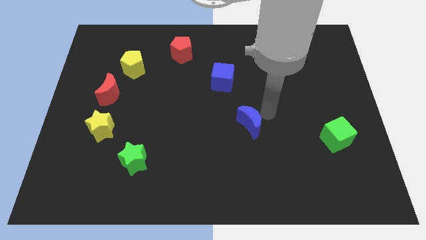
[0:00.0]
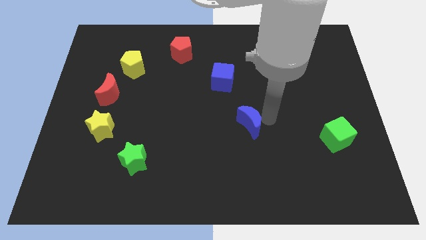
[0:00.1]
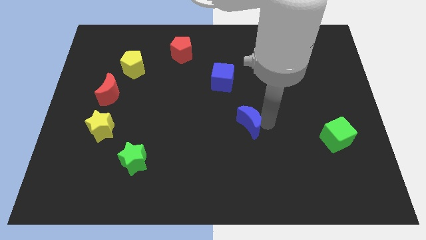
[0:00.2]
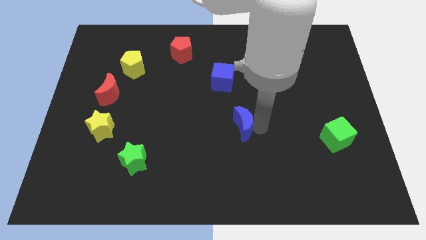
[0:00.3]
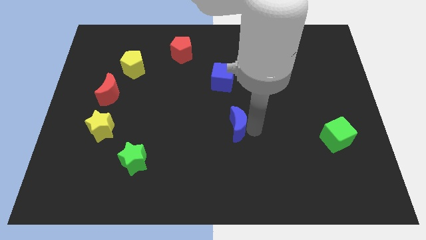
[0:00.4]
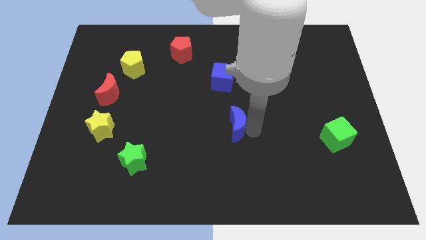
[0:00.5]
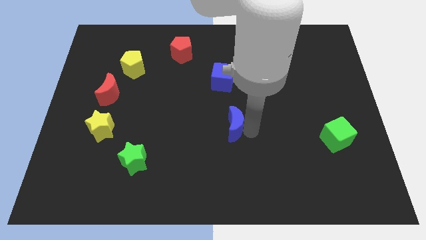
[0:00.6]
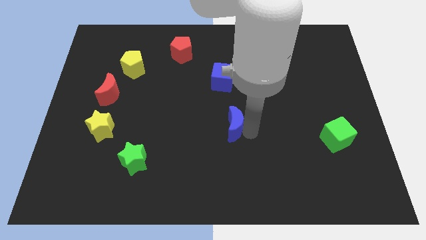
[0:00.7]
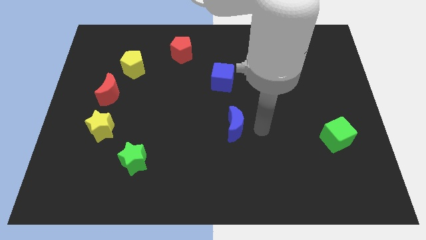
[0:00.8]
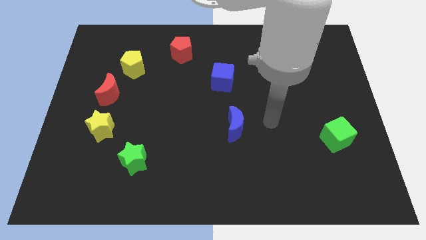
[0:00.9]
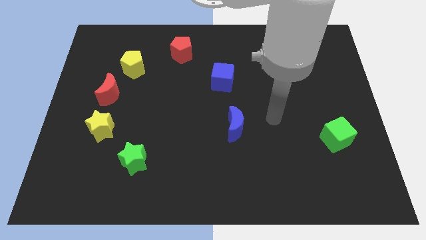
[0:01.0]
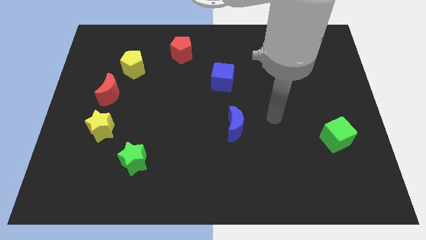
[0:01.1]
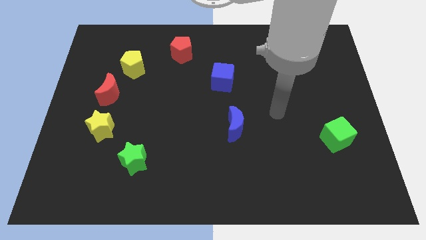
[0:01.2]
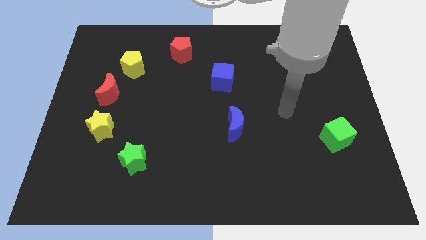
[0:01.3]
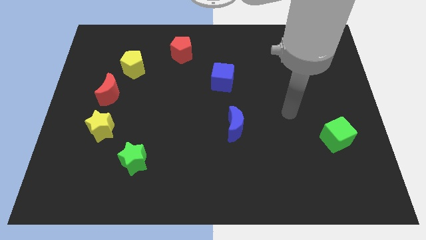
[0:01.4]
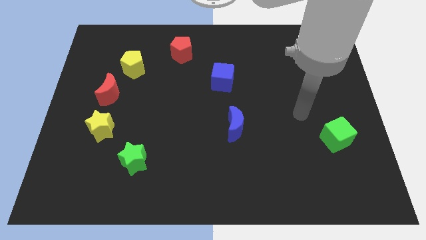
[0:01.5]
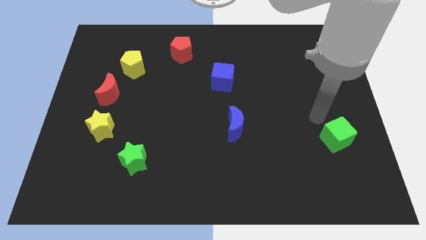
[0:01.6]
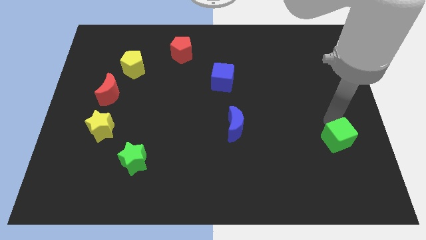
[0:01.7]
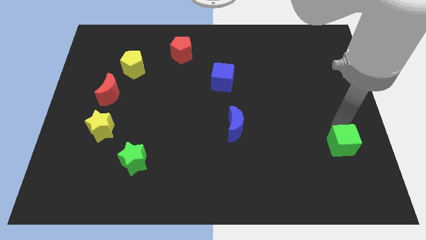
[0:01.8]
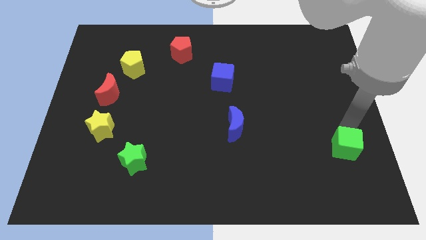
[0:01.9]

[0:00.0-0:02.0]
move your arm above green cube

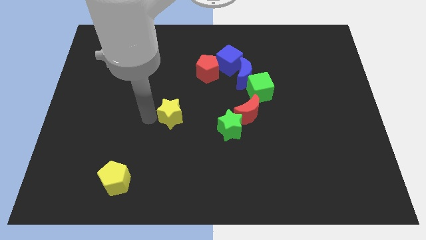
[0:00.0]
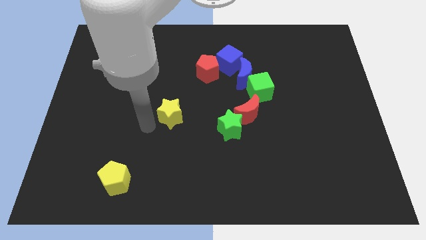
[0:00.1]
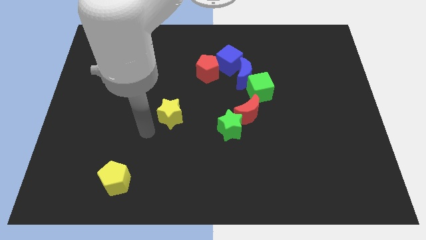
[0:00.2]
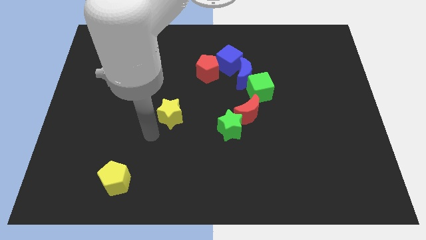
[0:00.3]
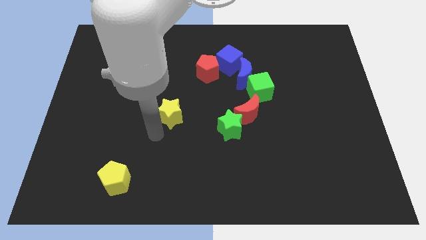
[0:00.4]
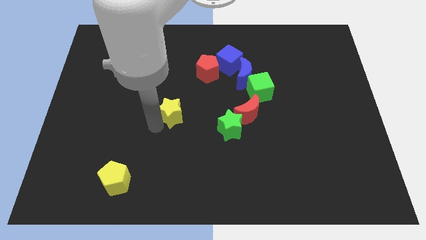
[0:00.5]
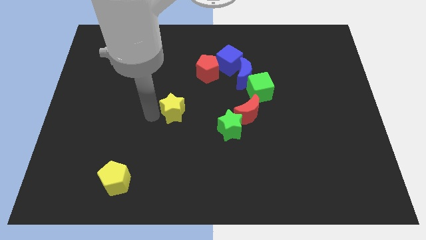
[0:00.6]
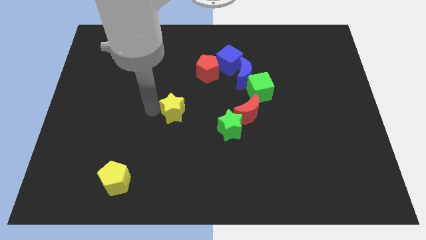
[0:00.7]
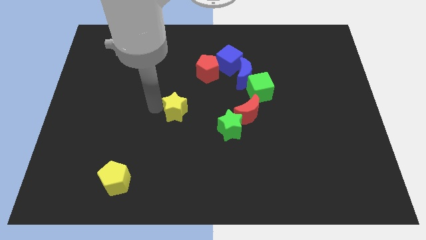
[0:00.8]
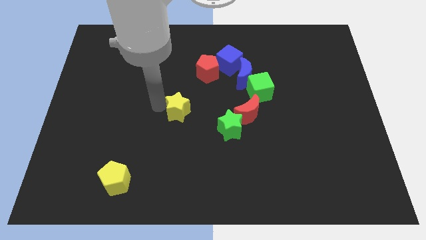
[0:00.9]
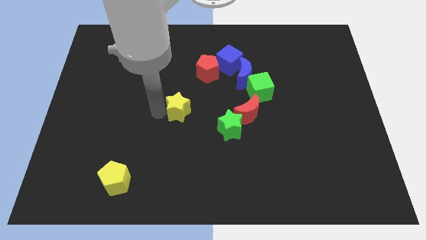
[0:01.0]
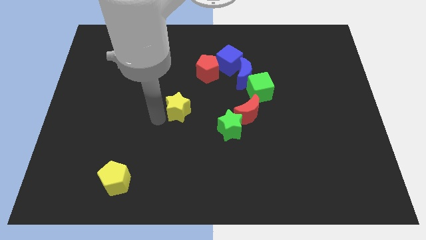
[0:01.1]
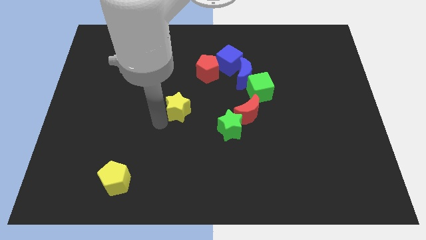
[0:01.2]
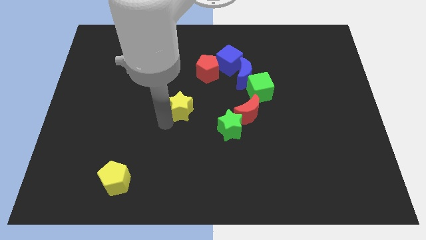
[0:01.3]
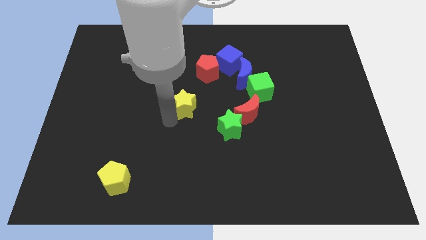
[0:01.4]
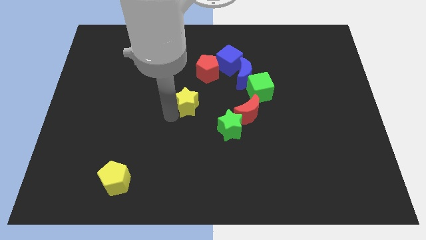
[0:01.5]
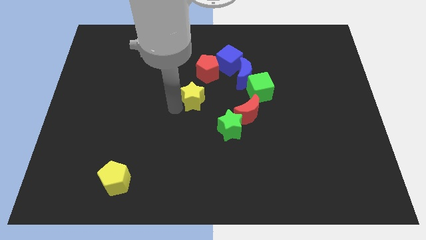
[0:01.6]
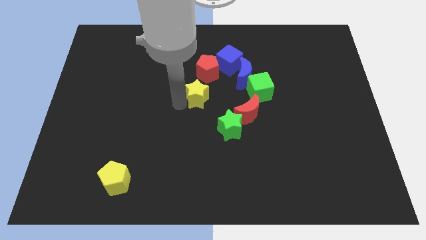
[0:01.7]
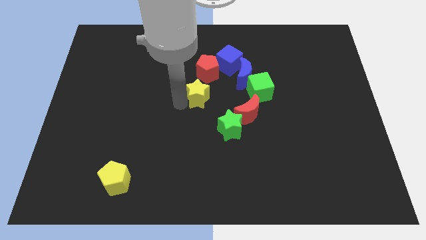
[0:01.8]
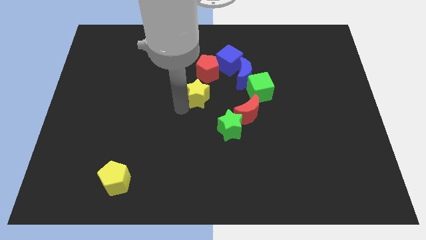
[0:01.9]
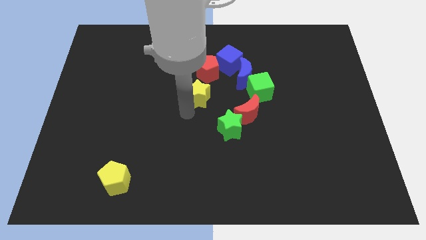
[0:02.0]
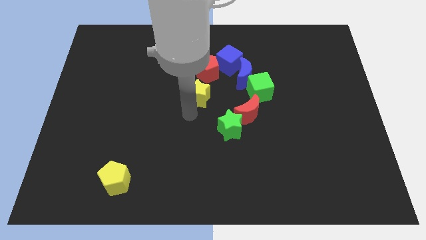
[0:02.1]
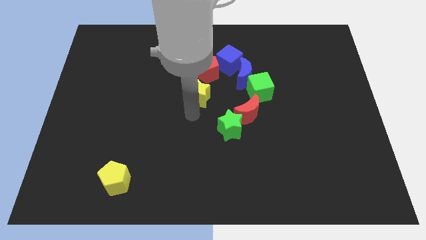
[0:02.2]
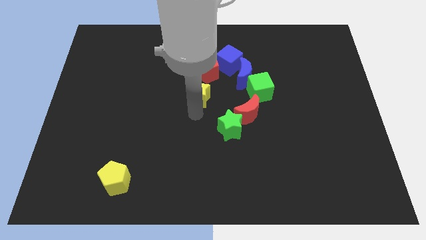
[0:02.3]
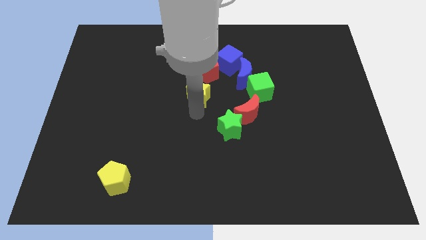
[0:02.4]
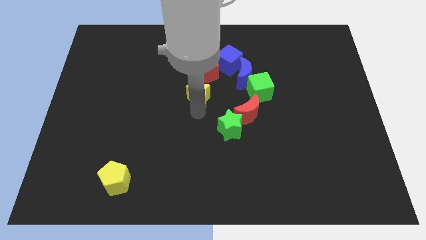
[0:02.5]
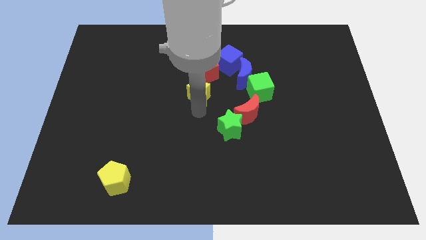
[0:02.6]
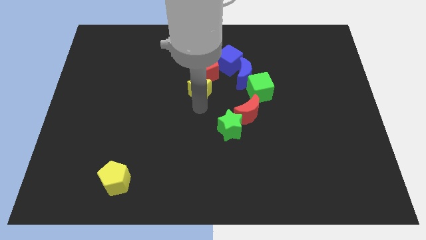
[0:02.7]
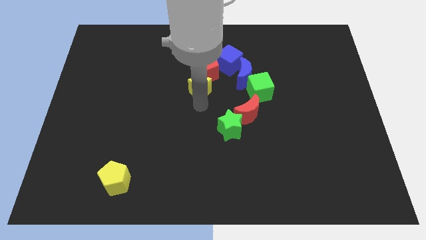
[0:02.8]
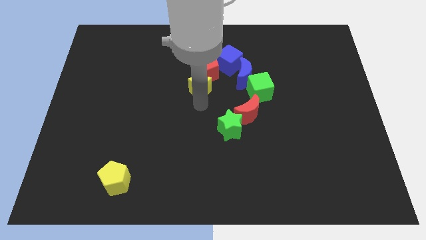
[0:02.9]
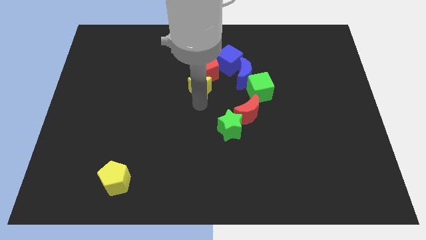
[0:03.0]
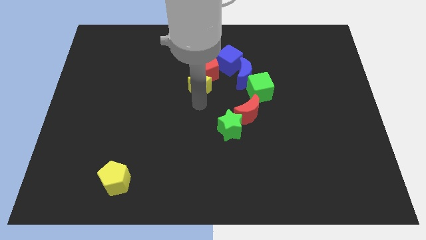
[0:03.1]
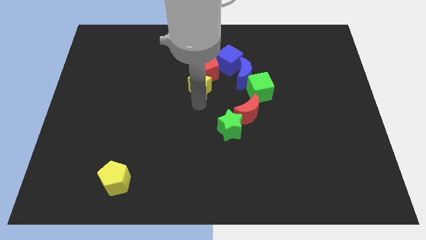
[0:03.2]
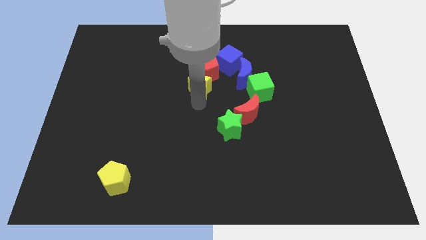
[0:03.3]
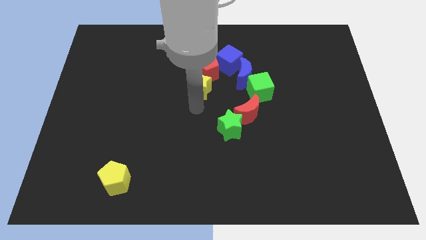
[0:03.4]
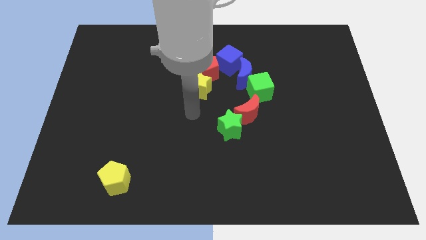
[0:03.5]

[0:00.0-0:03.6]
push yellow star near to red pentagon

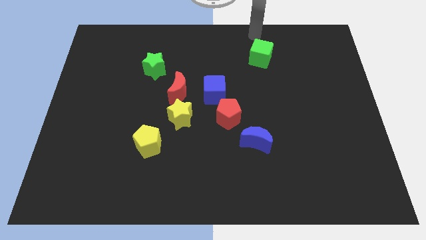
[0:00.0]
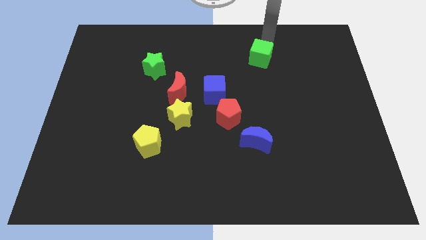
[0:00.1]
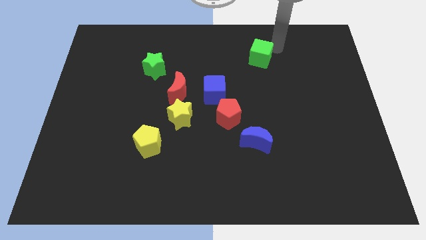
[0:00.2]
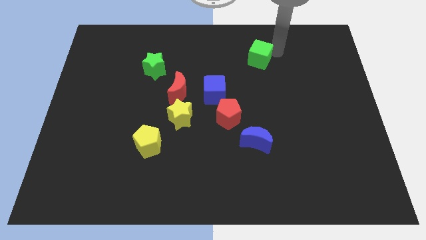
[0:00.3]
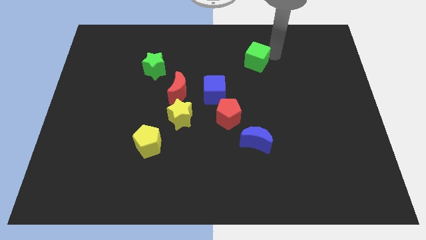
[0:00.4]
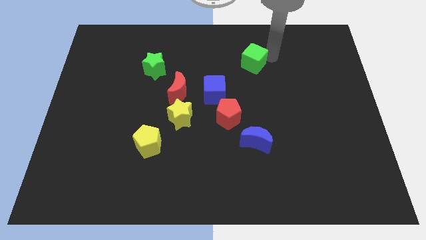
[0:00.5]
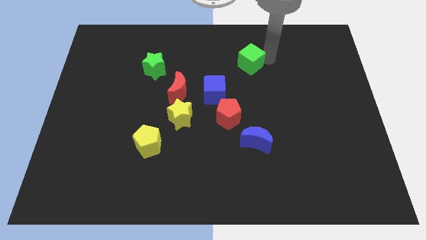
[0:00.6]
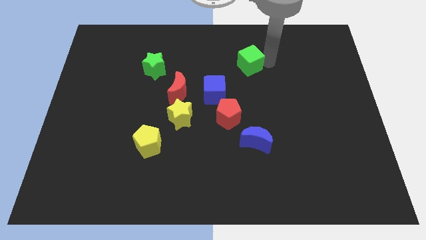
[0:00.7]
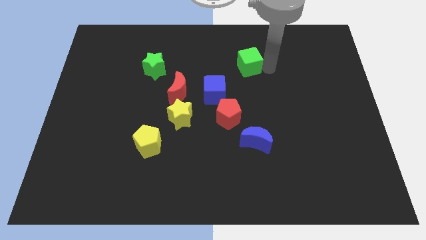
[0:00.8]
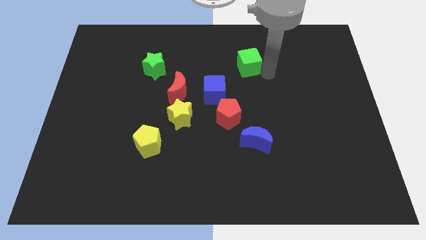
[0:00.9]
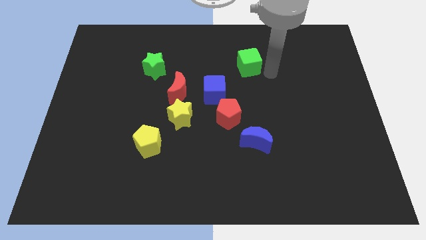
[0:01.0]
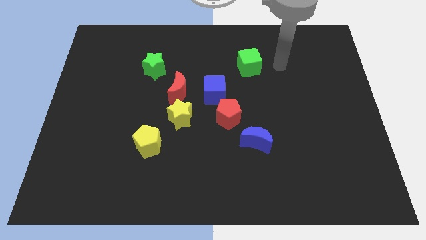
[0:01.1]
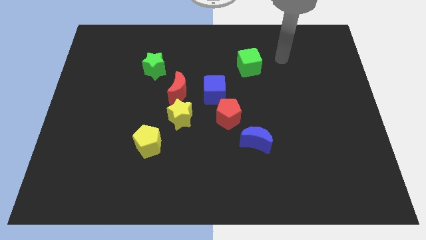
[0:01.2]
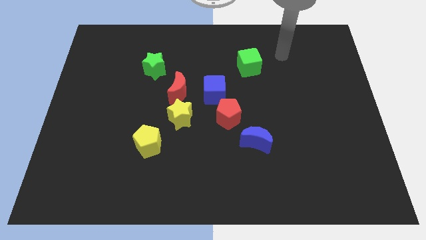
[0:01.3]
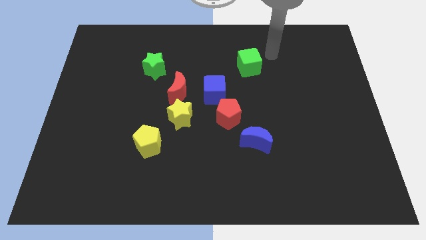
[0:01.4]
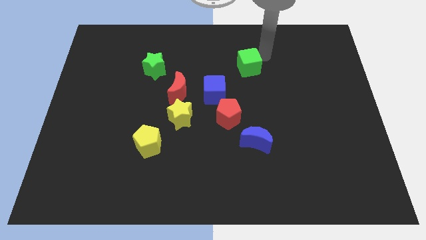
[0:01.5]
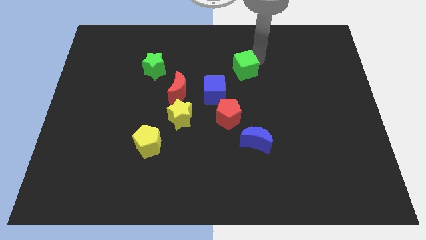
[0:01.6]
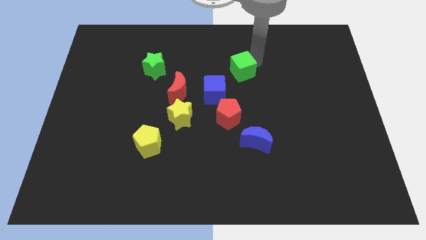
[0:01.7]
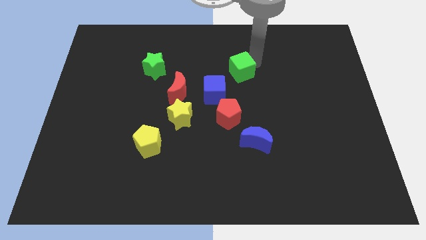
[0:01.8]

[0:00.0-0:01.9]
move the green cube diagonal to the blue cube

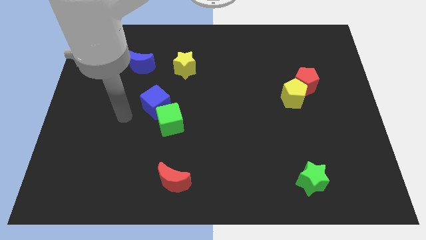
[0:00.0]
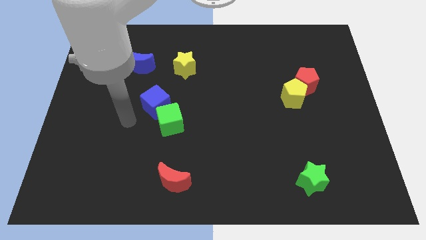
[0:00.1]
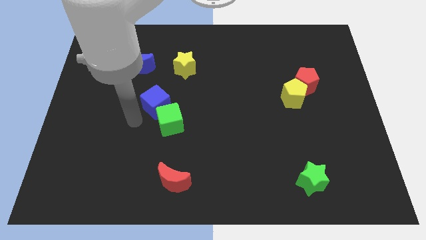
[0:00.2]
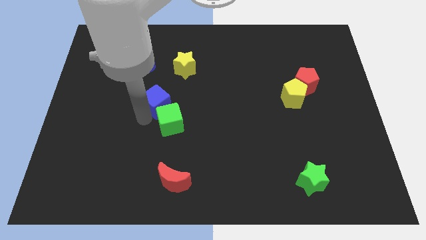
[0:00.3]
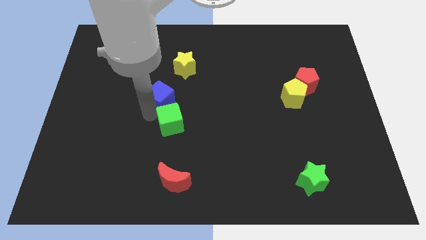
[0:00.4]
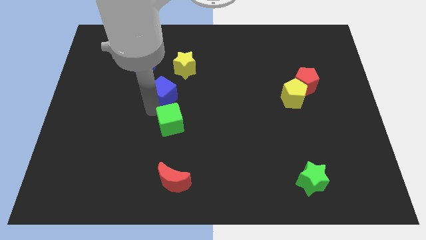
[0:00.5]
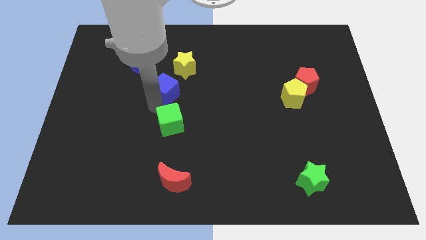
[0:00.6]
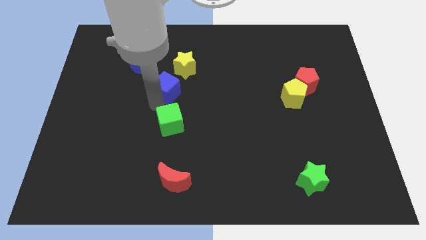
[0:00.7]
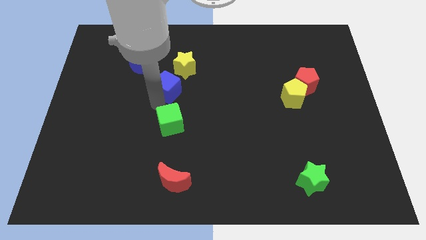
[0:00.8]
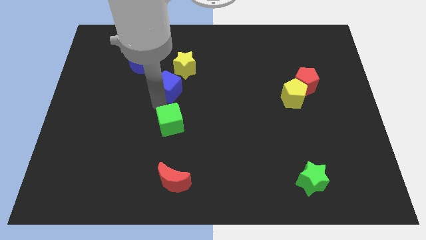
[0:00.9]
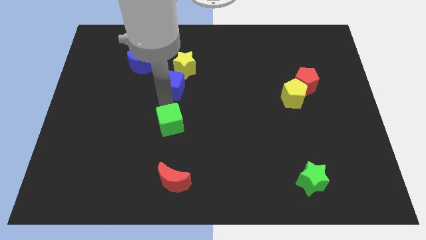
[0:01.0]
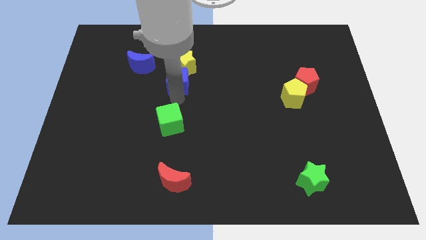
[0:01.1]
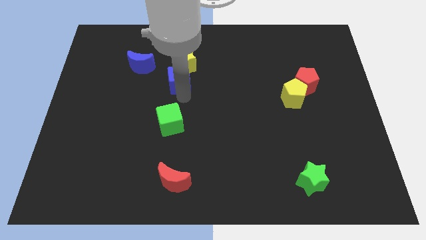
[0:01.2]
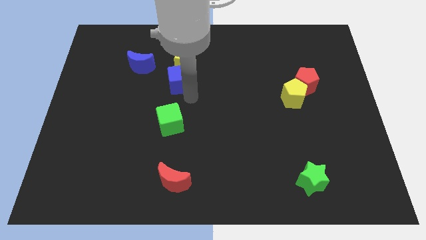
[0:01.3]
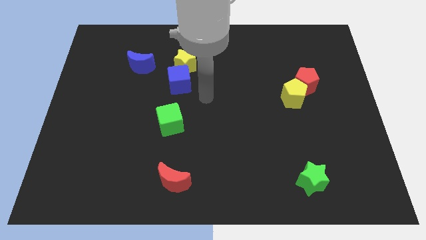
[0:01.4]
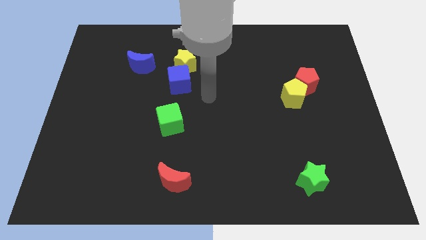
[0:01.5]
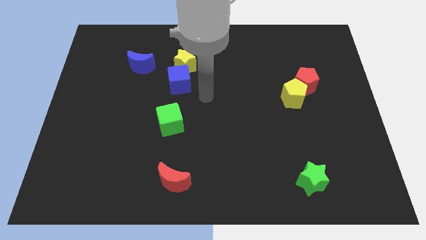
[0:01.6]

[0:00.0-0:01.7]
push blue cube into the yellow star
